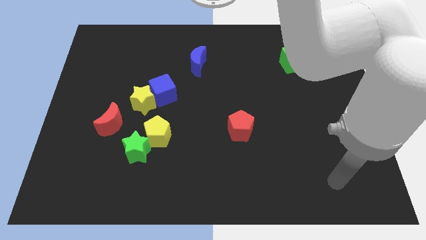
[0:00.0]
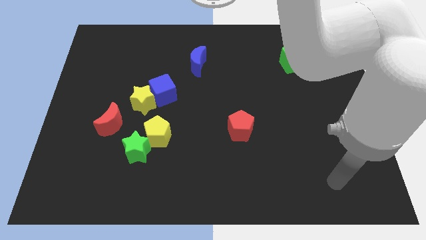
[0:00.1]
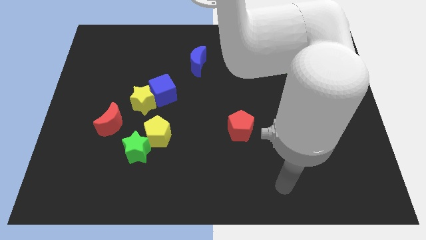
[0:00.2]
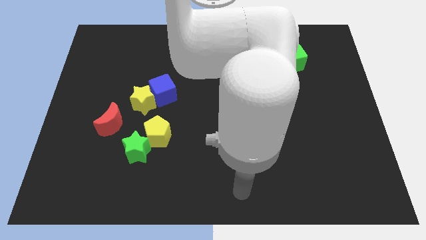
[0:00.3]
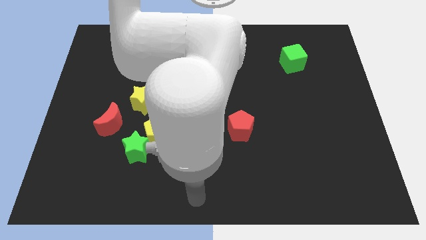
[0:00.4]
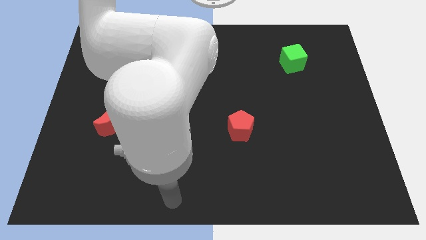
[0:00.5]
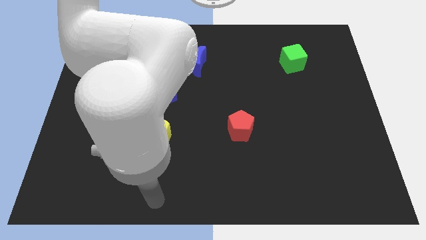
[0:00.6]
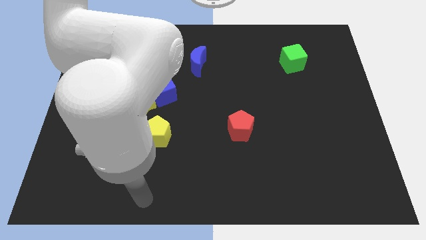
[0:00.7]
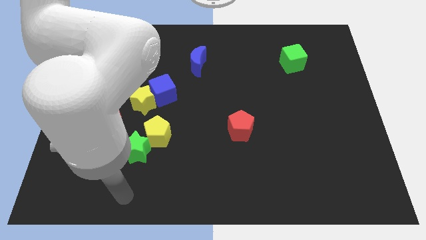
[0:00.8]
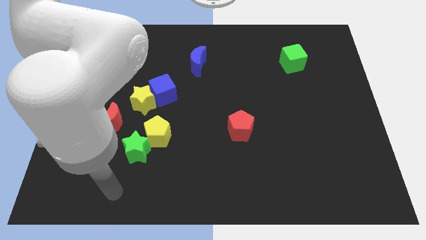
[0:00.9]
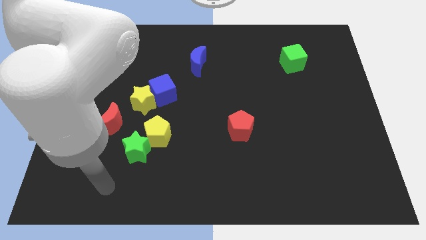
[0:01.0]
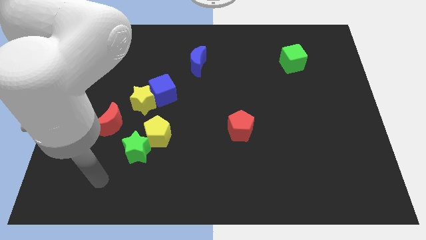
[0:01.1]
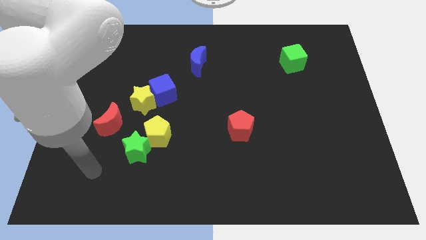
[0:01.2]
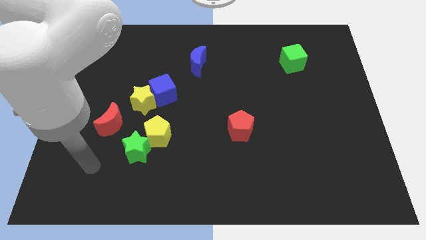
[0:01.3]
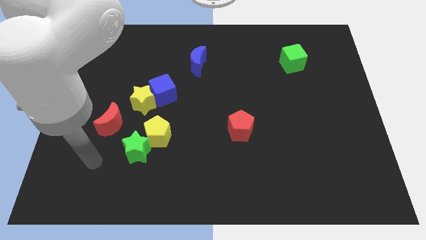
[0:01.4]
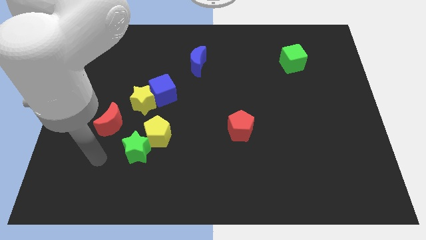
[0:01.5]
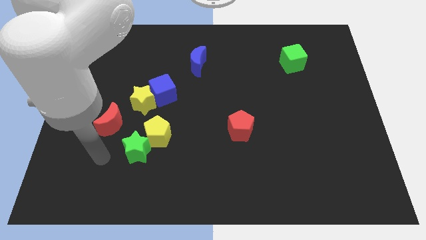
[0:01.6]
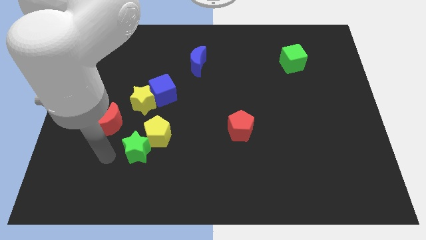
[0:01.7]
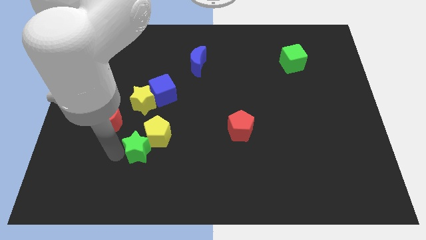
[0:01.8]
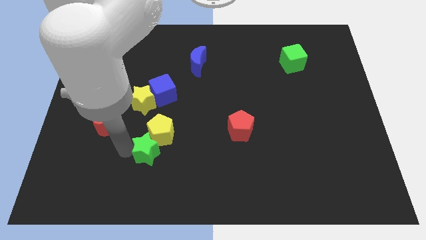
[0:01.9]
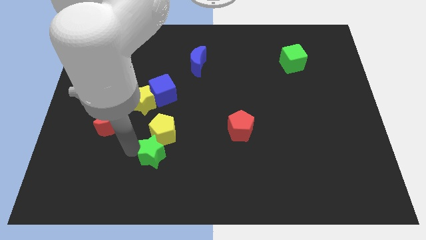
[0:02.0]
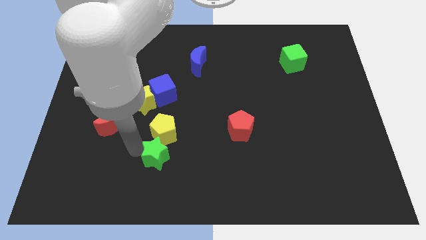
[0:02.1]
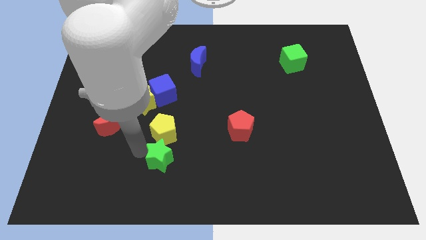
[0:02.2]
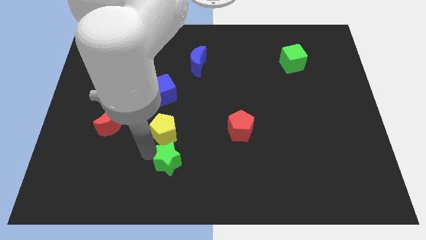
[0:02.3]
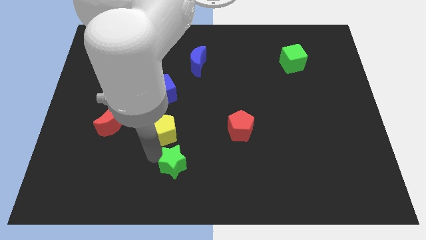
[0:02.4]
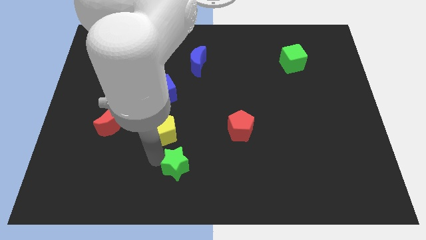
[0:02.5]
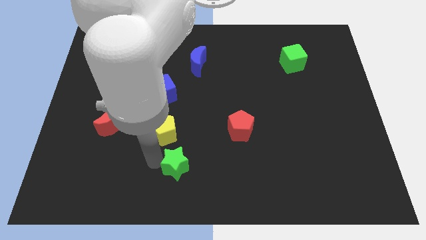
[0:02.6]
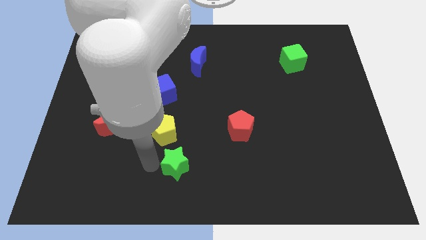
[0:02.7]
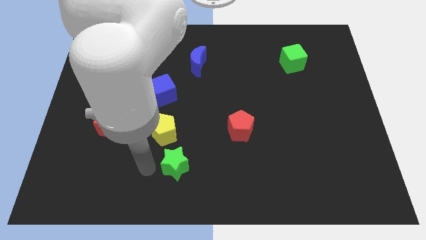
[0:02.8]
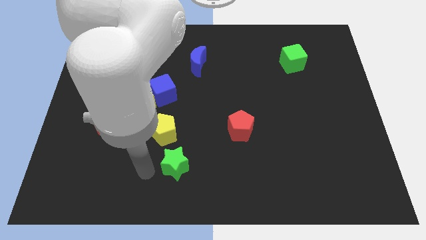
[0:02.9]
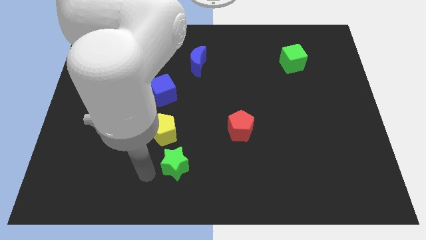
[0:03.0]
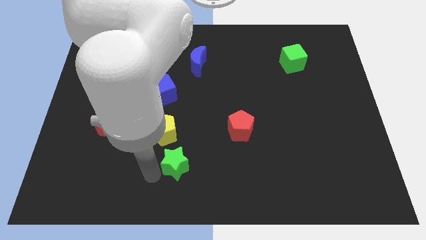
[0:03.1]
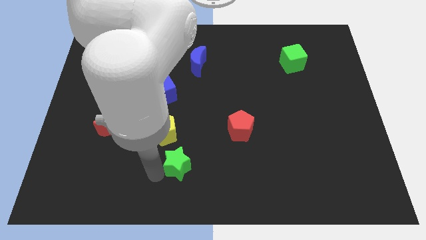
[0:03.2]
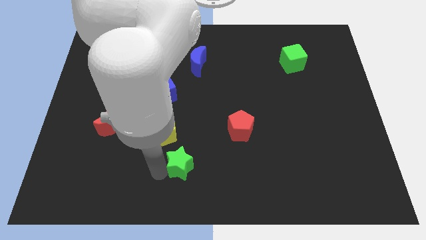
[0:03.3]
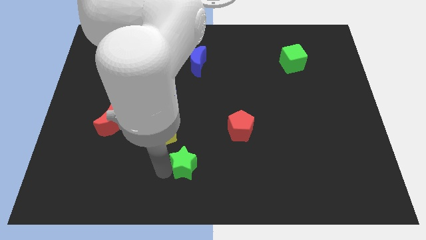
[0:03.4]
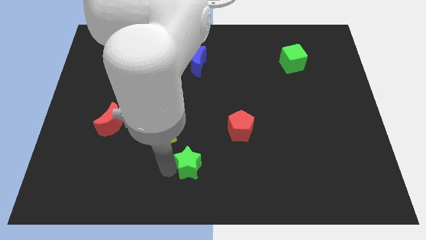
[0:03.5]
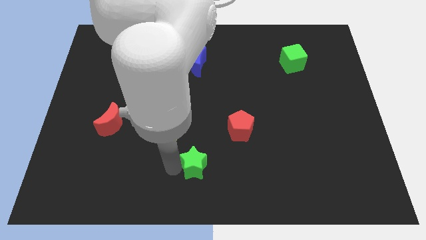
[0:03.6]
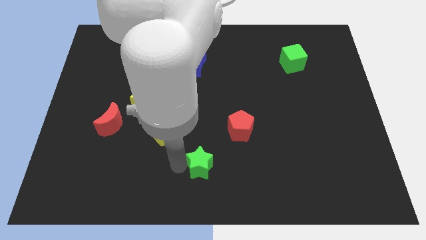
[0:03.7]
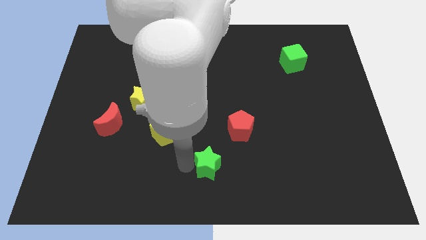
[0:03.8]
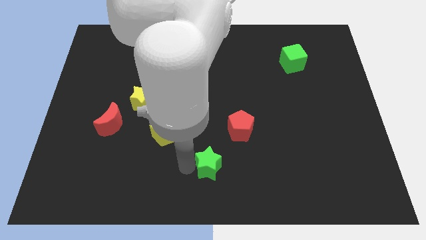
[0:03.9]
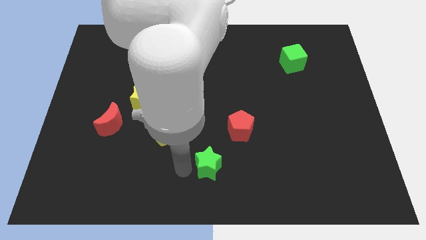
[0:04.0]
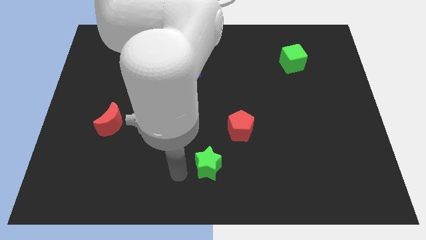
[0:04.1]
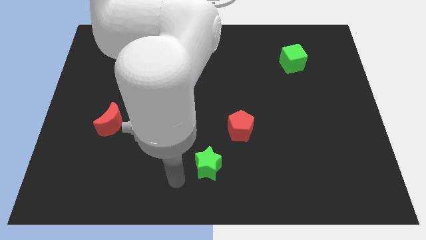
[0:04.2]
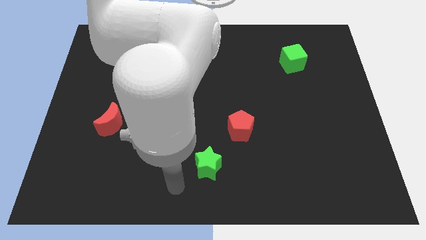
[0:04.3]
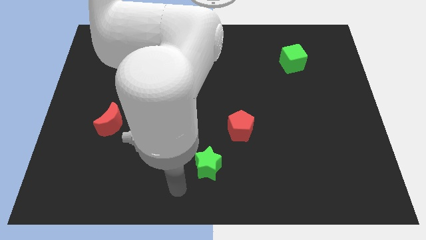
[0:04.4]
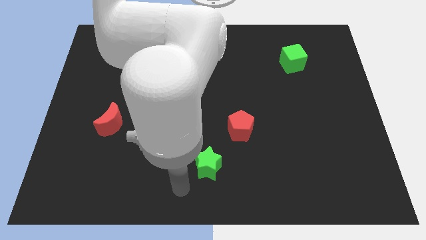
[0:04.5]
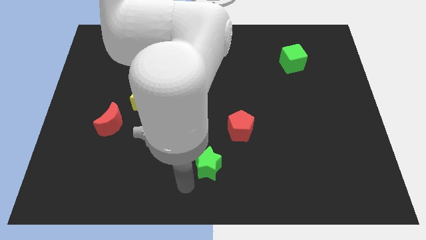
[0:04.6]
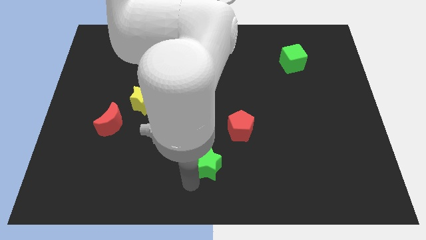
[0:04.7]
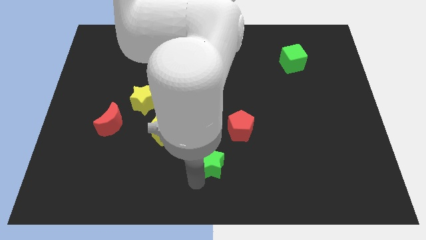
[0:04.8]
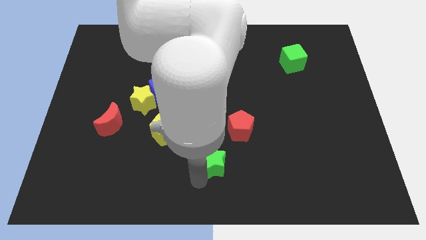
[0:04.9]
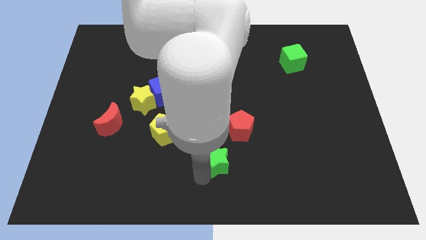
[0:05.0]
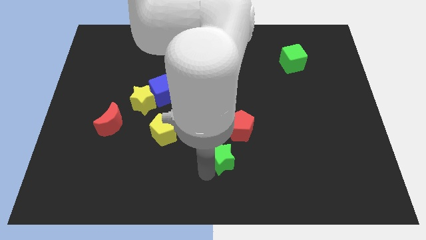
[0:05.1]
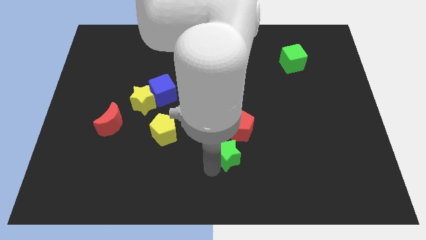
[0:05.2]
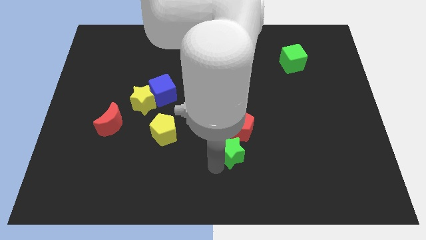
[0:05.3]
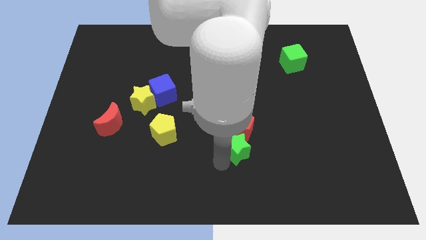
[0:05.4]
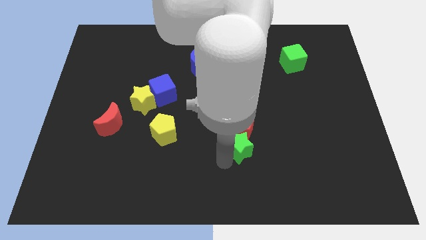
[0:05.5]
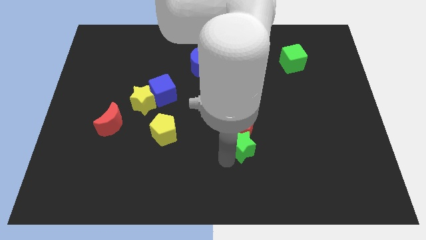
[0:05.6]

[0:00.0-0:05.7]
push the green star close to the red pentagon

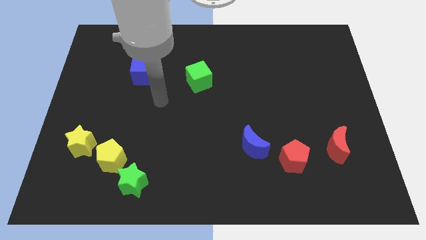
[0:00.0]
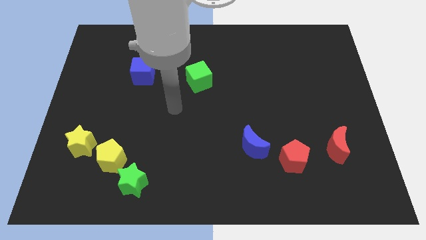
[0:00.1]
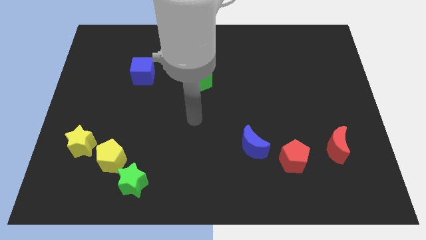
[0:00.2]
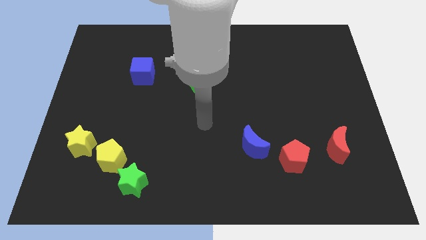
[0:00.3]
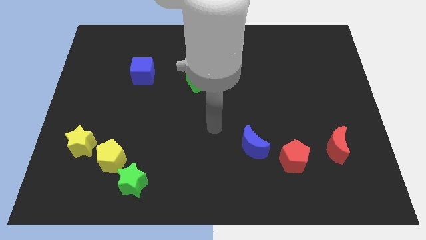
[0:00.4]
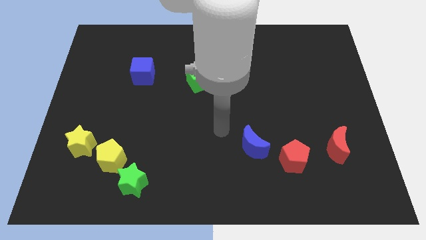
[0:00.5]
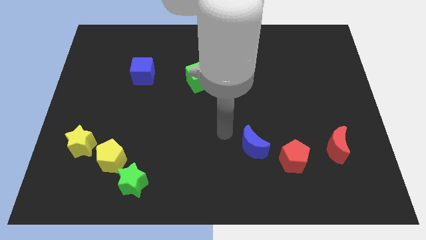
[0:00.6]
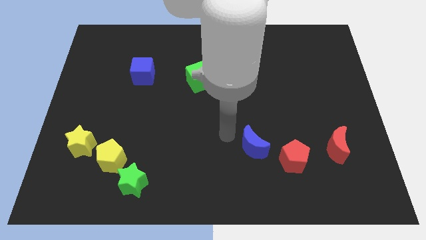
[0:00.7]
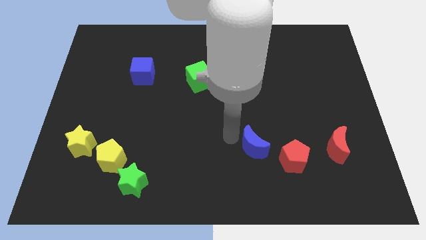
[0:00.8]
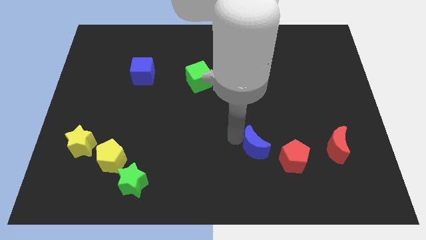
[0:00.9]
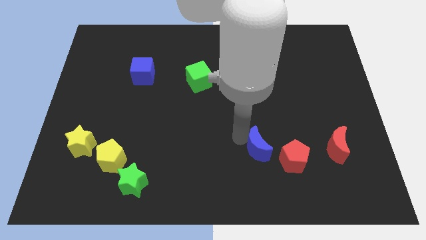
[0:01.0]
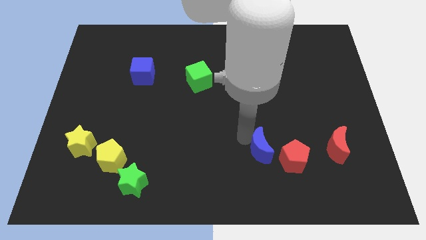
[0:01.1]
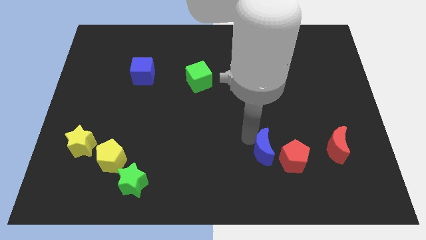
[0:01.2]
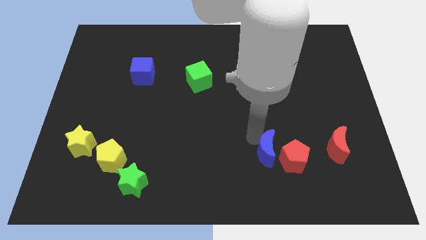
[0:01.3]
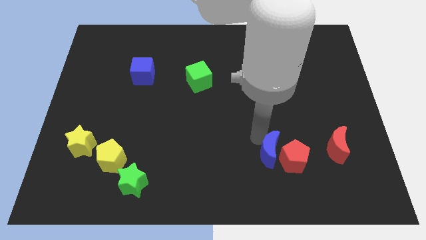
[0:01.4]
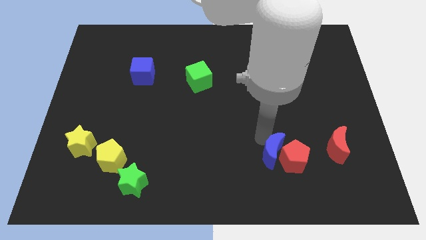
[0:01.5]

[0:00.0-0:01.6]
put the blue moon next to the red pentagon

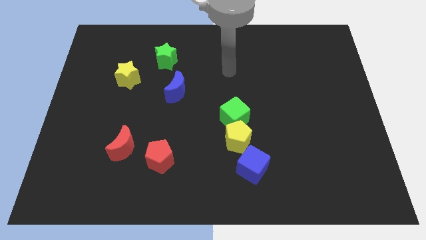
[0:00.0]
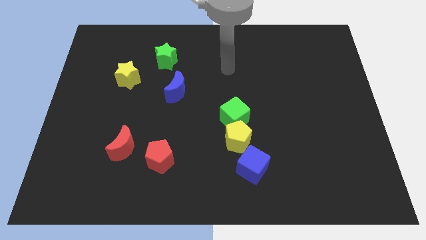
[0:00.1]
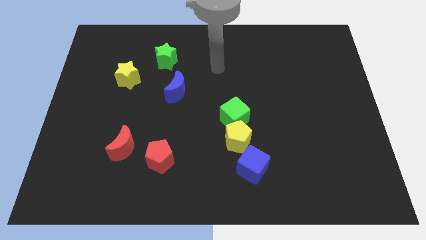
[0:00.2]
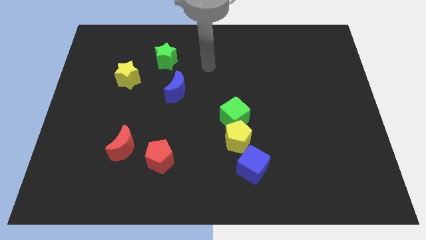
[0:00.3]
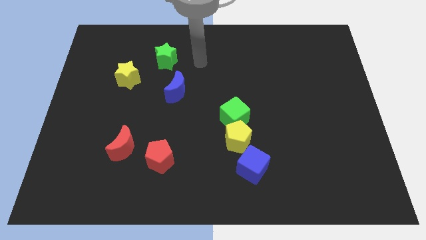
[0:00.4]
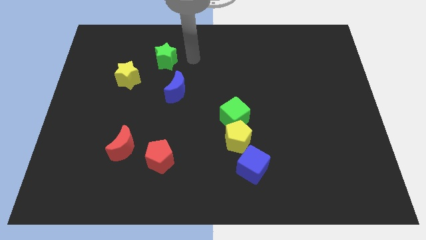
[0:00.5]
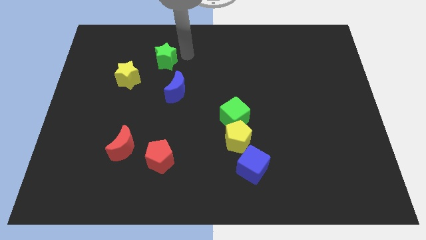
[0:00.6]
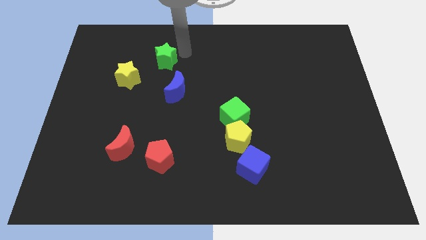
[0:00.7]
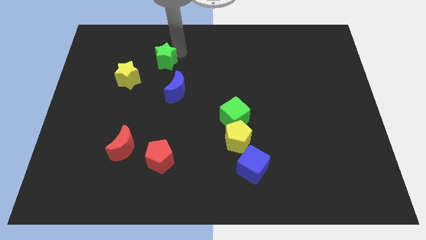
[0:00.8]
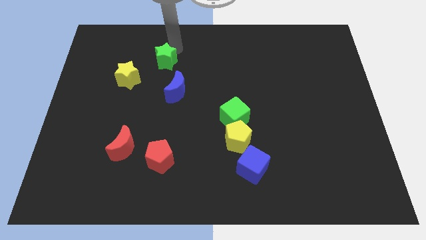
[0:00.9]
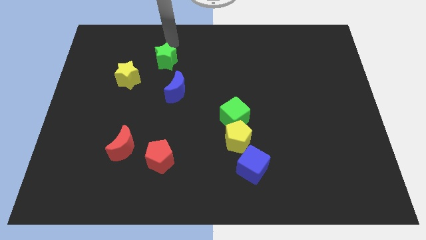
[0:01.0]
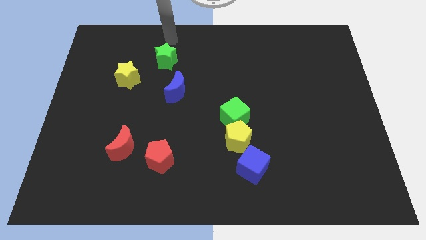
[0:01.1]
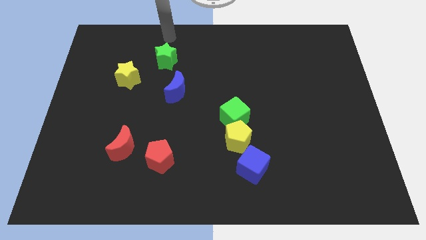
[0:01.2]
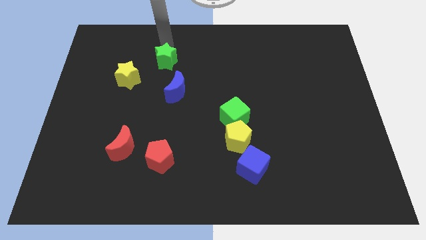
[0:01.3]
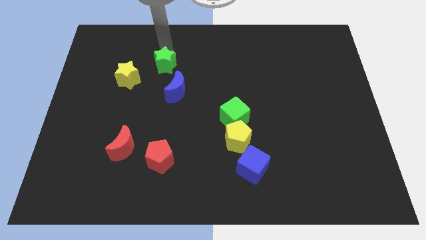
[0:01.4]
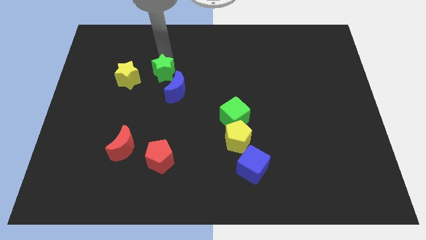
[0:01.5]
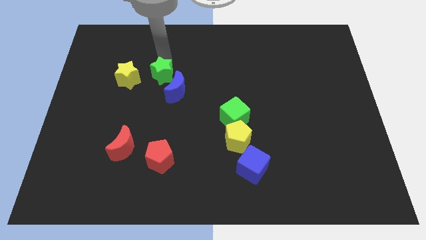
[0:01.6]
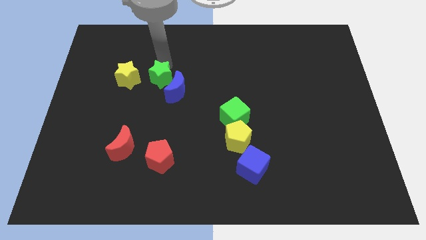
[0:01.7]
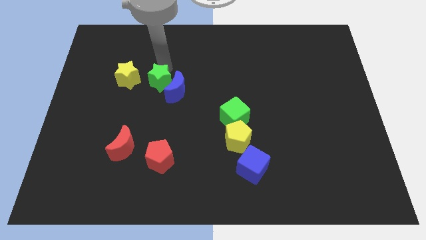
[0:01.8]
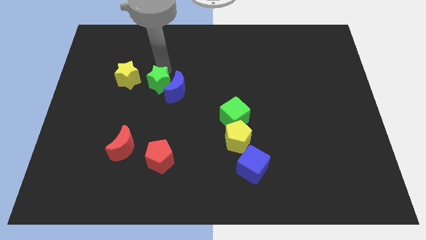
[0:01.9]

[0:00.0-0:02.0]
slide the green star to the blue moon
